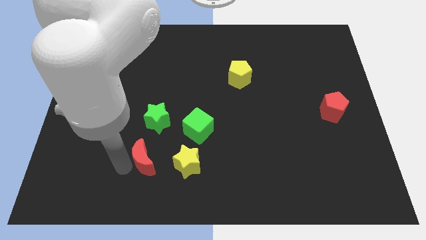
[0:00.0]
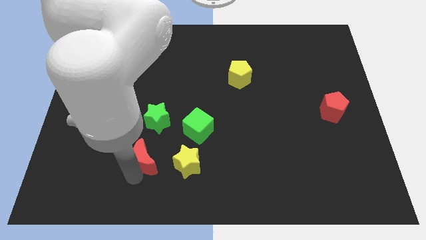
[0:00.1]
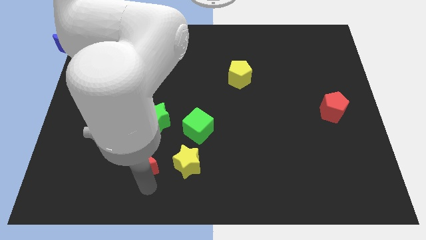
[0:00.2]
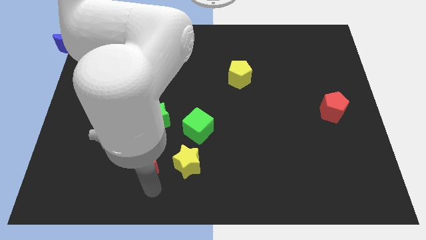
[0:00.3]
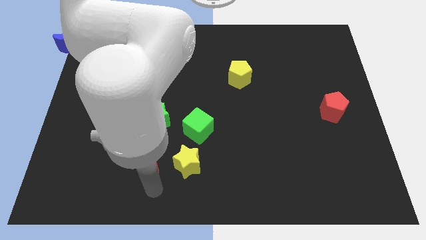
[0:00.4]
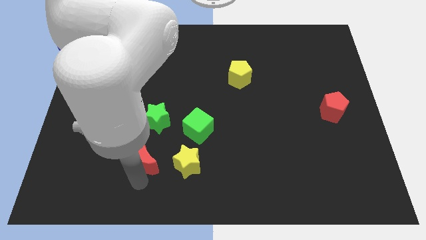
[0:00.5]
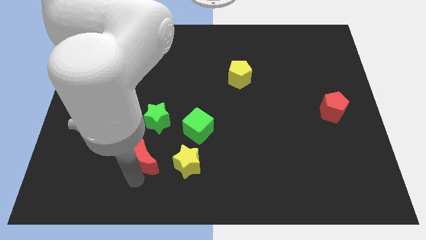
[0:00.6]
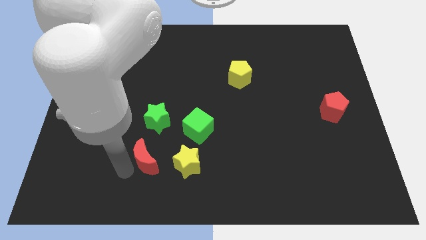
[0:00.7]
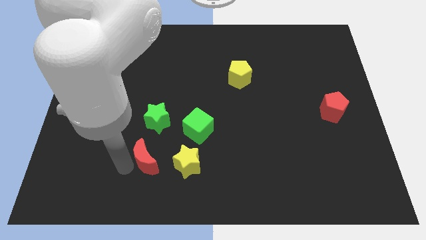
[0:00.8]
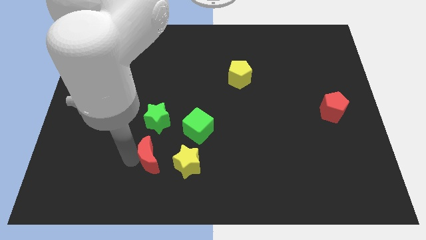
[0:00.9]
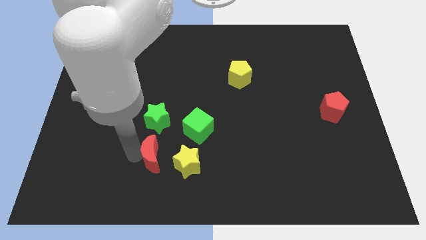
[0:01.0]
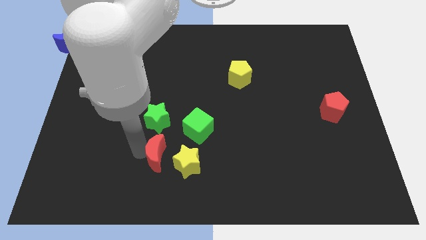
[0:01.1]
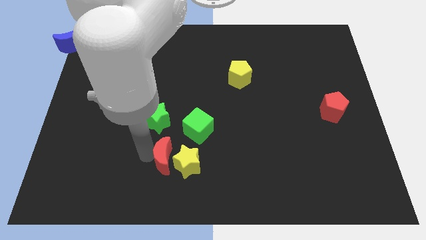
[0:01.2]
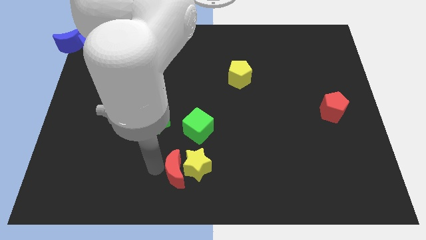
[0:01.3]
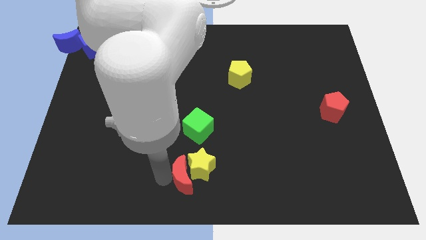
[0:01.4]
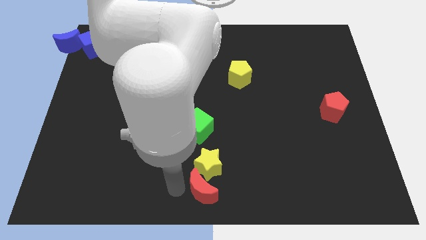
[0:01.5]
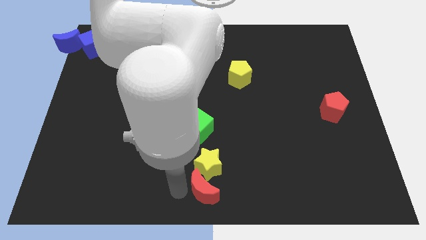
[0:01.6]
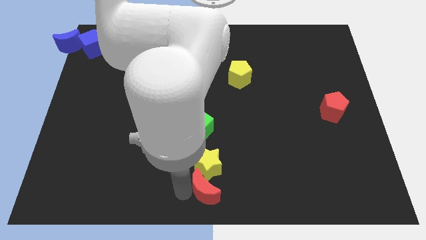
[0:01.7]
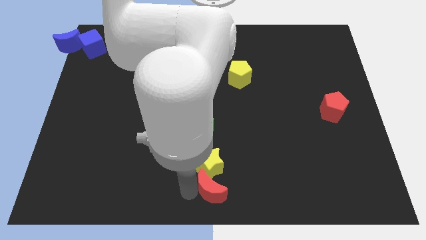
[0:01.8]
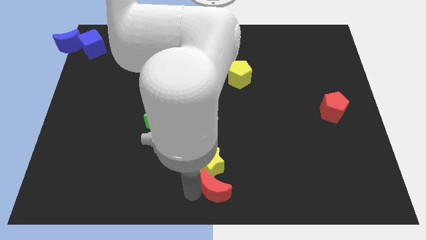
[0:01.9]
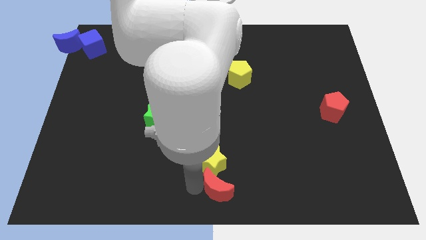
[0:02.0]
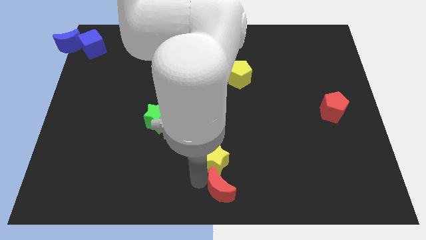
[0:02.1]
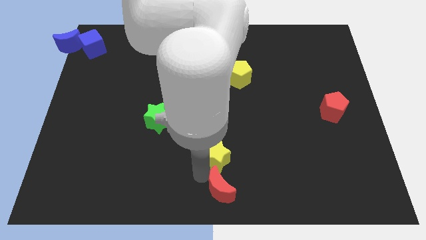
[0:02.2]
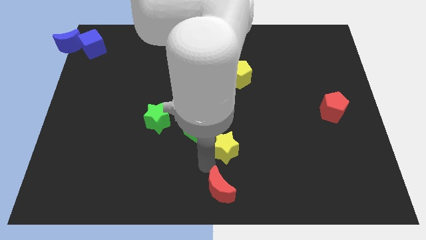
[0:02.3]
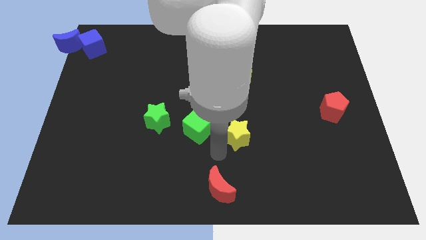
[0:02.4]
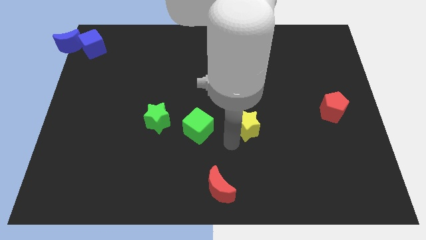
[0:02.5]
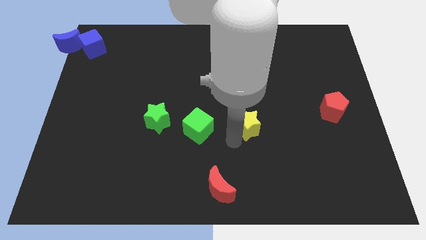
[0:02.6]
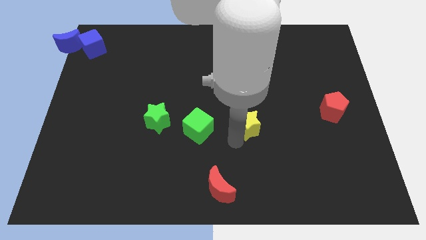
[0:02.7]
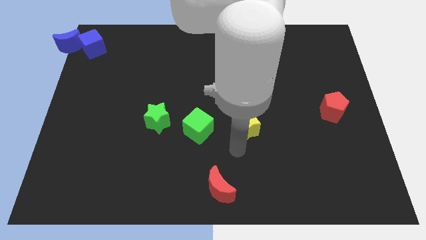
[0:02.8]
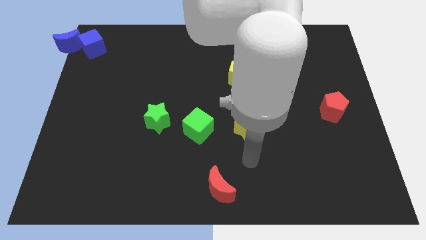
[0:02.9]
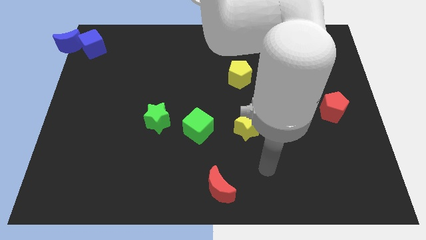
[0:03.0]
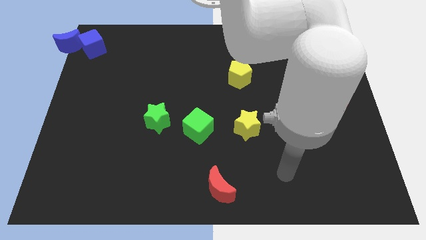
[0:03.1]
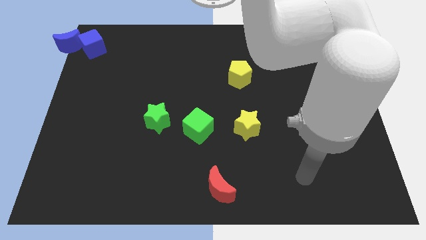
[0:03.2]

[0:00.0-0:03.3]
move the yellow star below the yellow pentagon

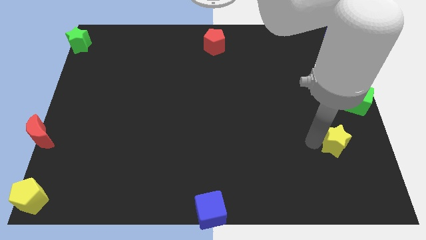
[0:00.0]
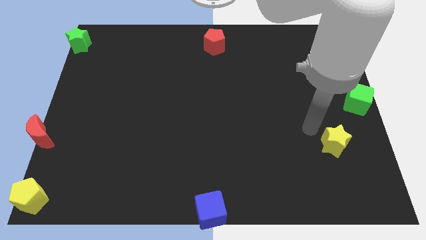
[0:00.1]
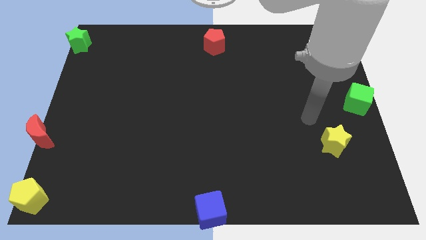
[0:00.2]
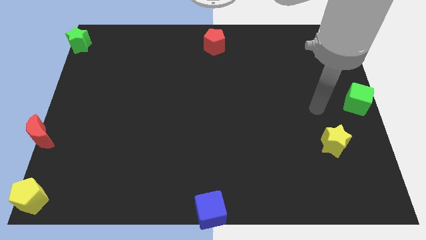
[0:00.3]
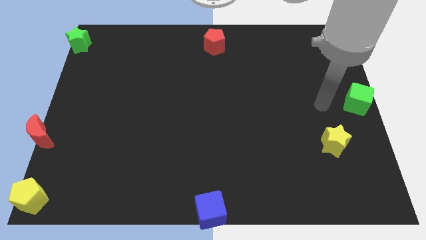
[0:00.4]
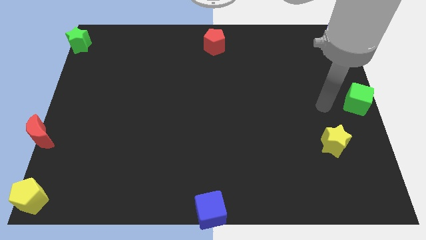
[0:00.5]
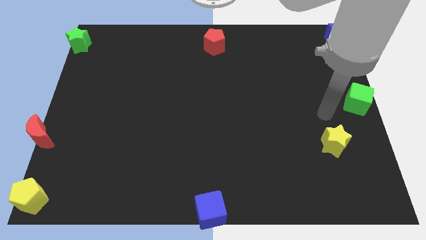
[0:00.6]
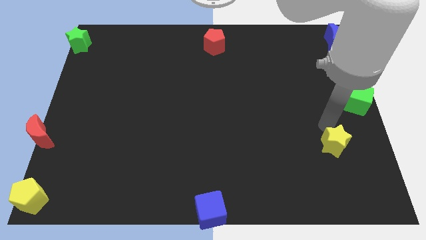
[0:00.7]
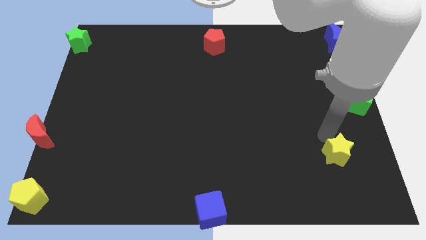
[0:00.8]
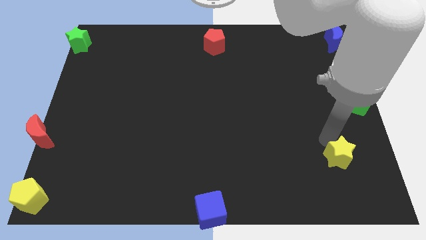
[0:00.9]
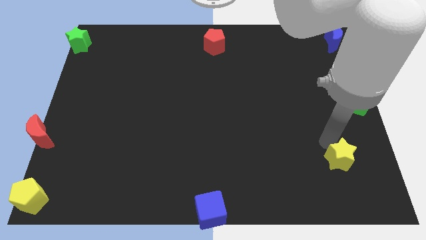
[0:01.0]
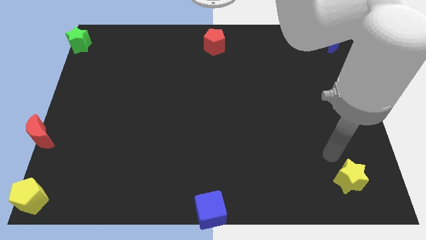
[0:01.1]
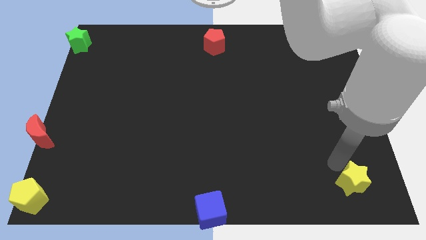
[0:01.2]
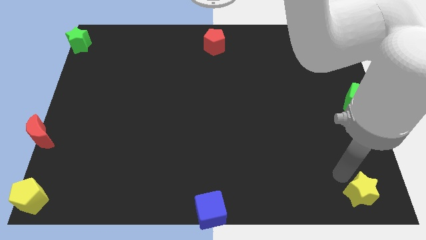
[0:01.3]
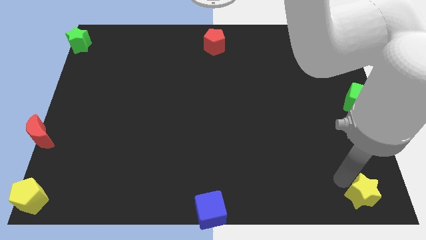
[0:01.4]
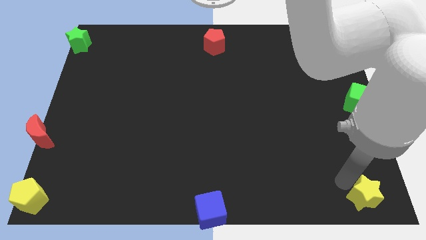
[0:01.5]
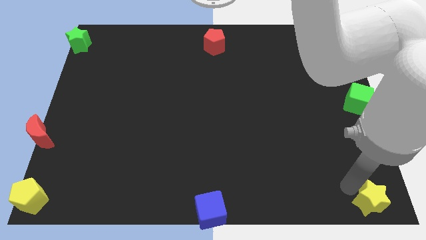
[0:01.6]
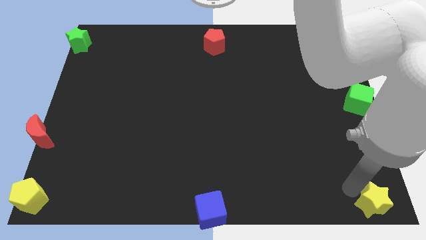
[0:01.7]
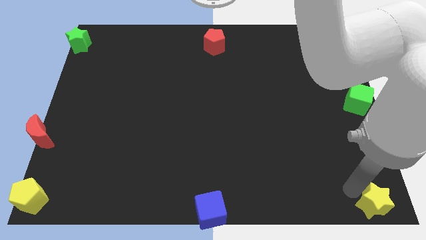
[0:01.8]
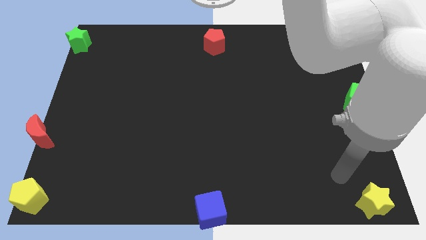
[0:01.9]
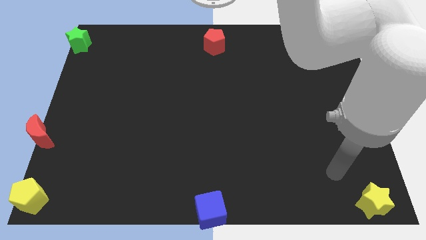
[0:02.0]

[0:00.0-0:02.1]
move yellow star towards the bottom right corner of the board

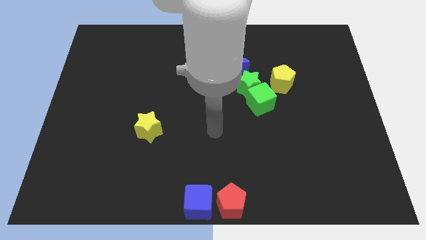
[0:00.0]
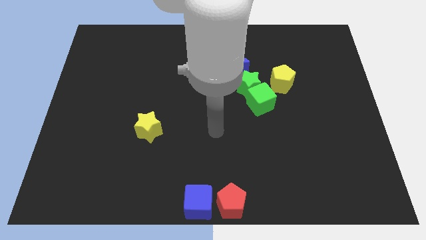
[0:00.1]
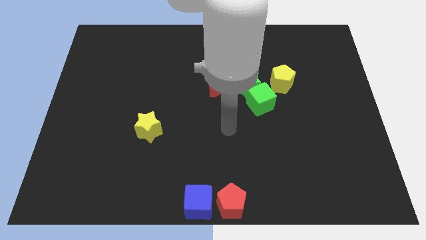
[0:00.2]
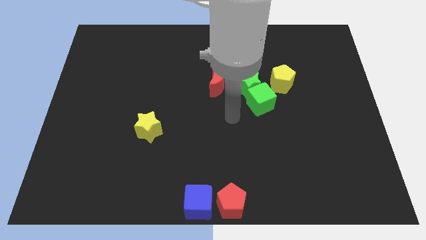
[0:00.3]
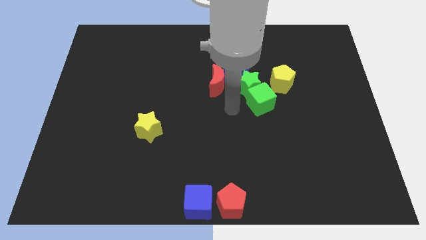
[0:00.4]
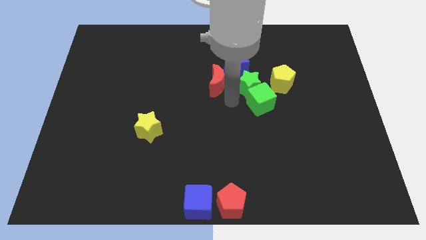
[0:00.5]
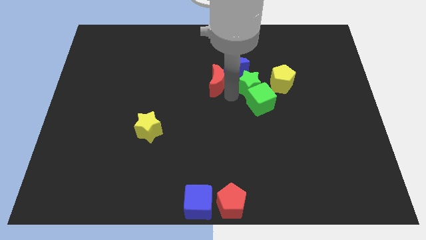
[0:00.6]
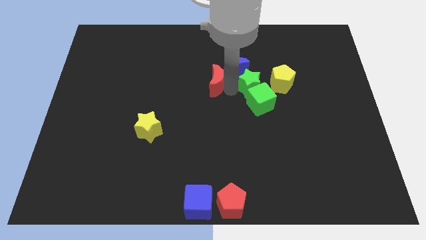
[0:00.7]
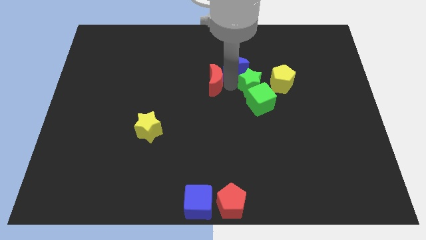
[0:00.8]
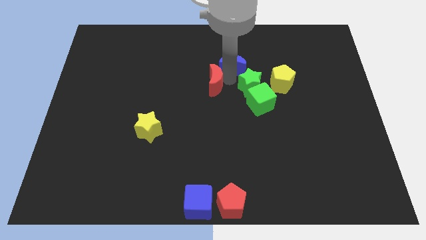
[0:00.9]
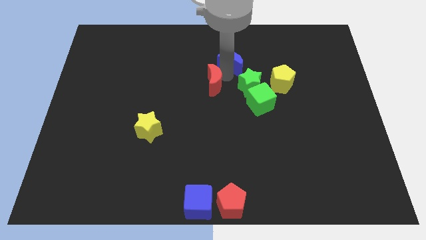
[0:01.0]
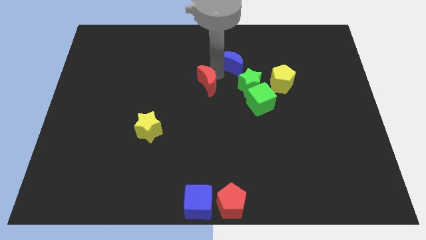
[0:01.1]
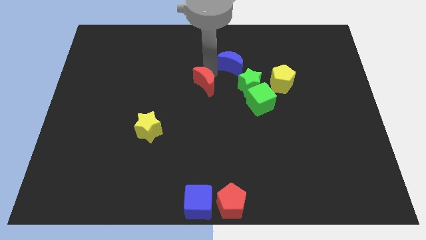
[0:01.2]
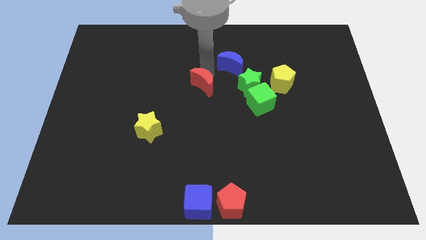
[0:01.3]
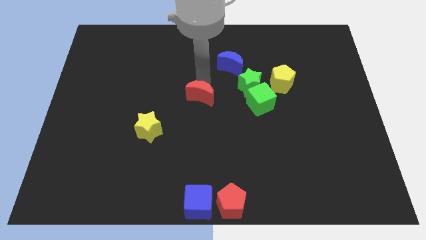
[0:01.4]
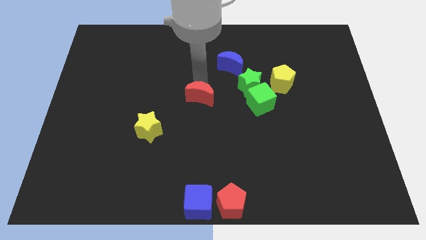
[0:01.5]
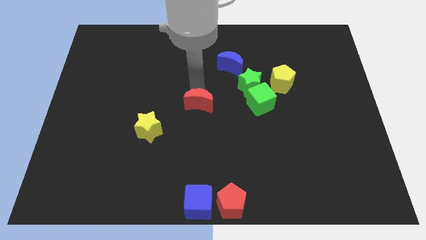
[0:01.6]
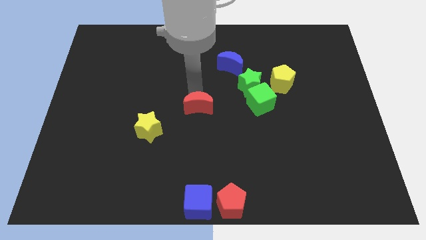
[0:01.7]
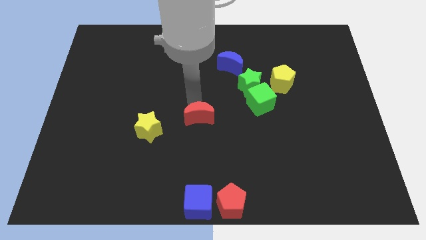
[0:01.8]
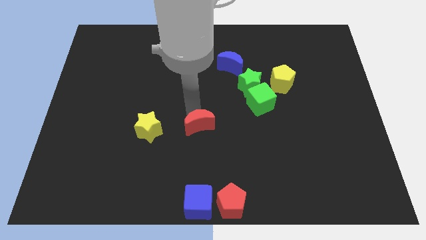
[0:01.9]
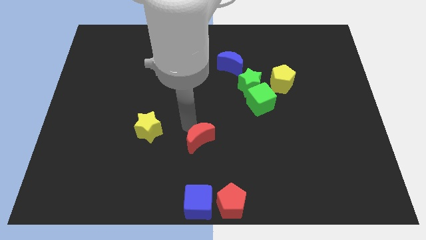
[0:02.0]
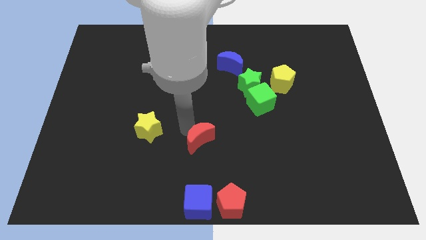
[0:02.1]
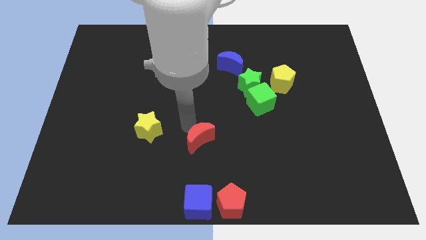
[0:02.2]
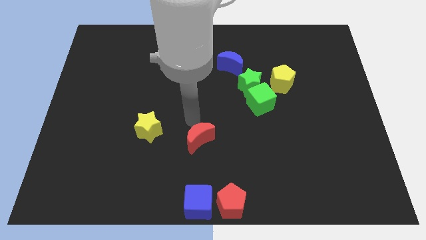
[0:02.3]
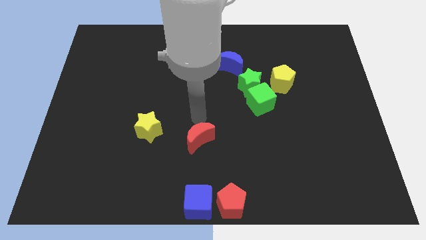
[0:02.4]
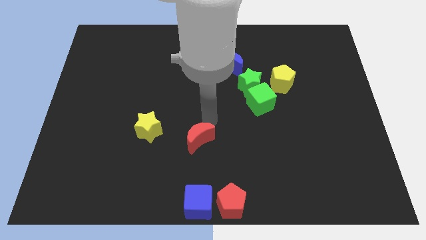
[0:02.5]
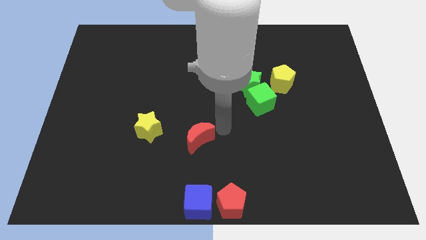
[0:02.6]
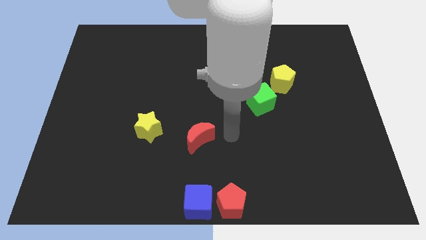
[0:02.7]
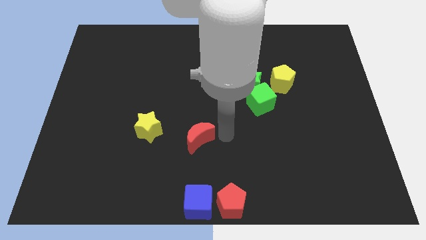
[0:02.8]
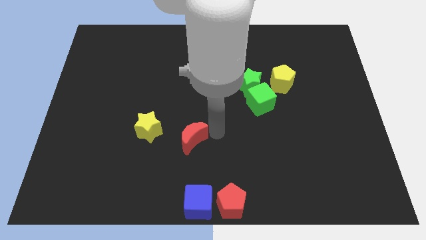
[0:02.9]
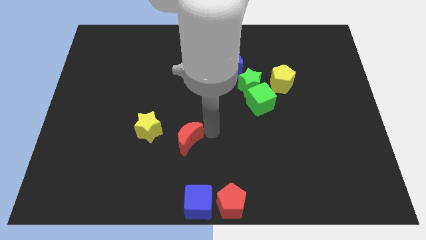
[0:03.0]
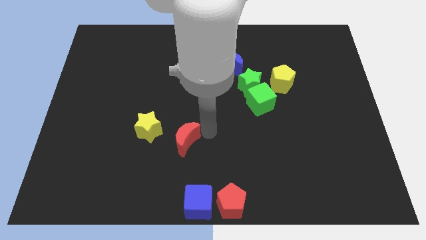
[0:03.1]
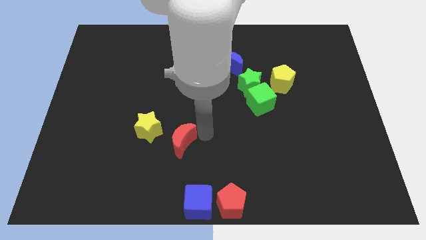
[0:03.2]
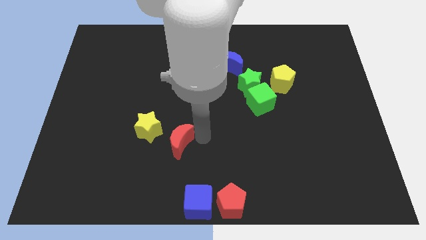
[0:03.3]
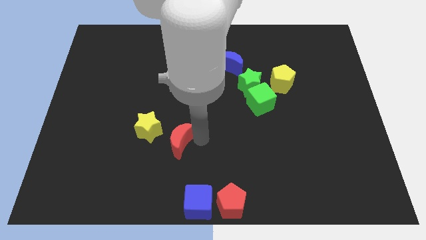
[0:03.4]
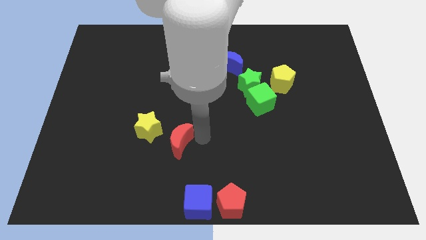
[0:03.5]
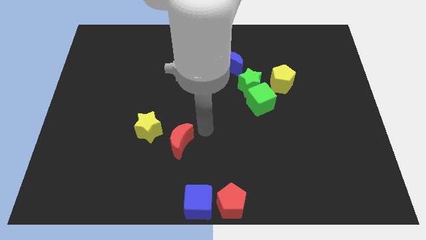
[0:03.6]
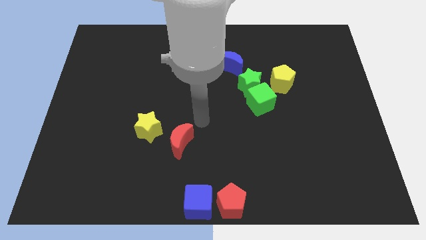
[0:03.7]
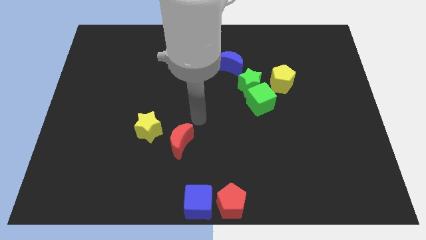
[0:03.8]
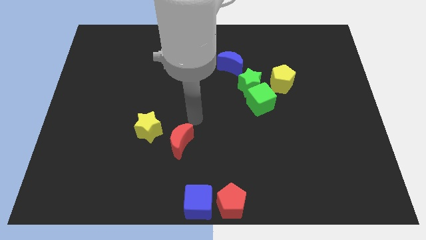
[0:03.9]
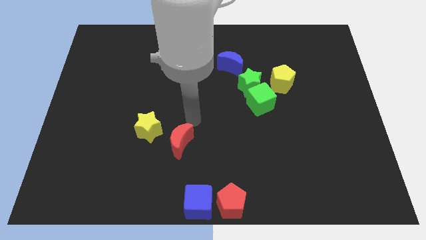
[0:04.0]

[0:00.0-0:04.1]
separate red moon from blue moon

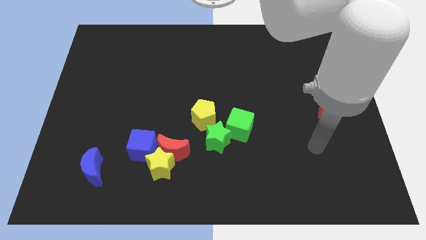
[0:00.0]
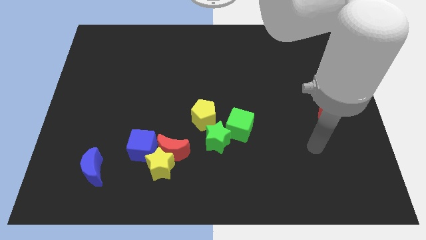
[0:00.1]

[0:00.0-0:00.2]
slide the green star to the right of yellow pentagon
